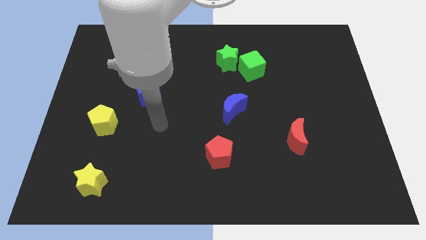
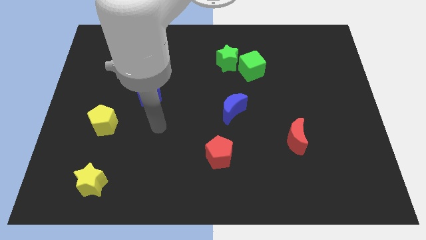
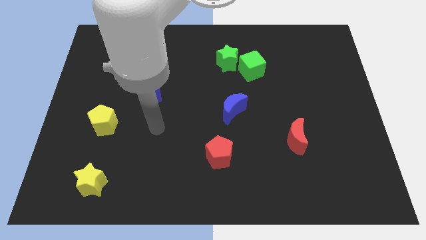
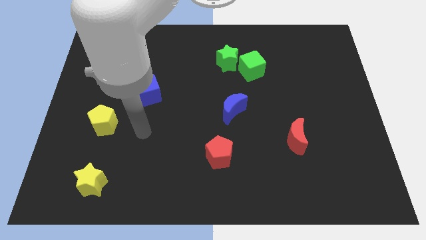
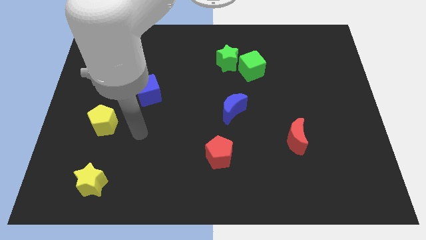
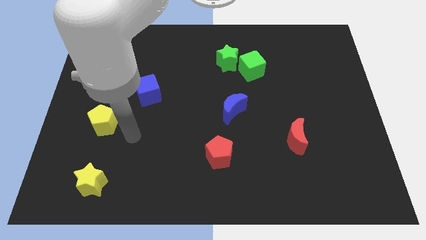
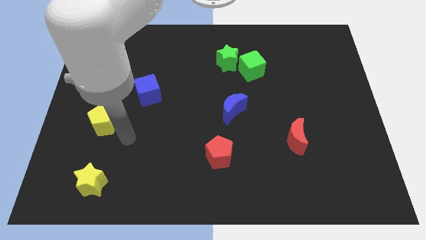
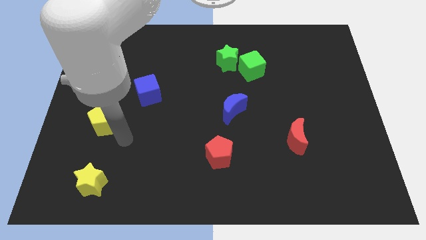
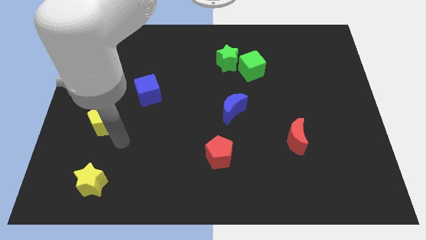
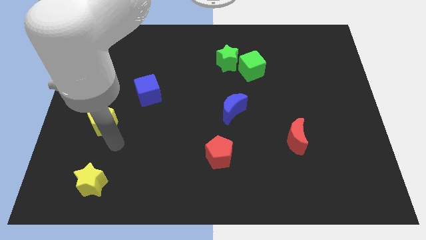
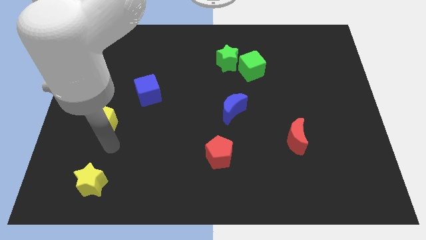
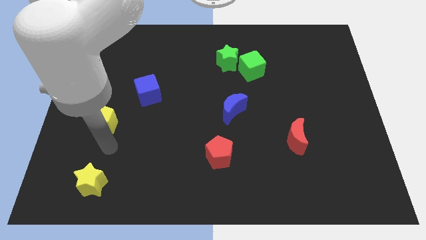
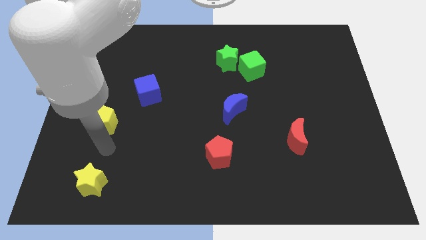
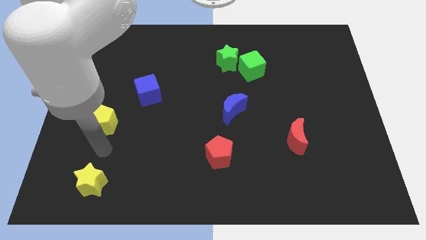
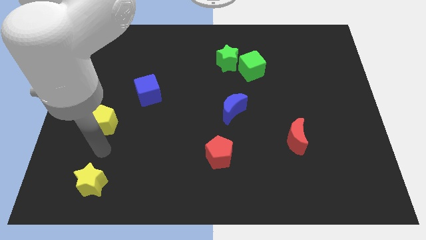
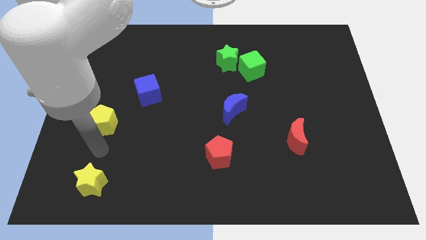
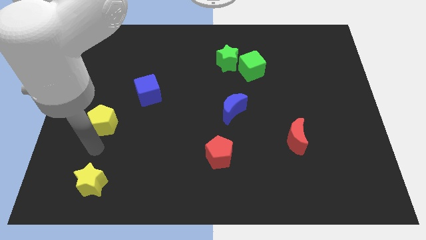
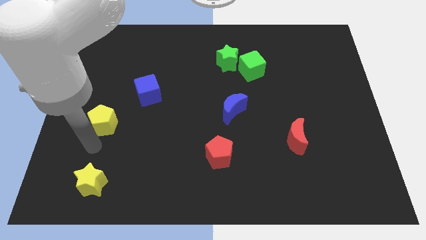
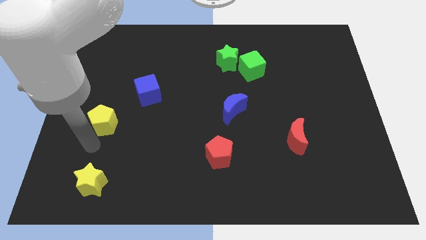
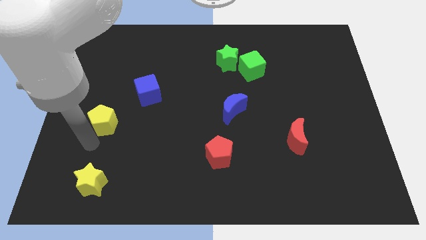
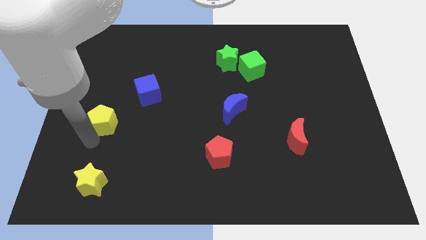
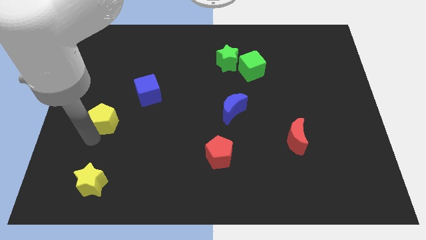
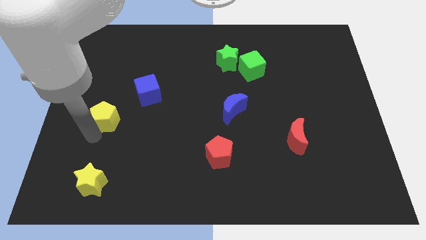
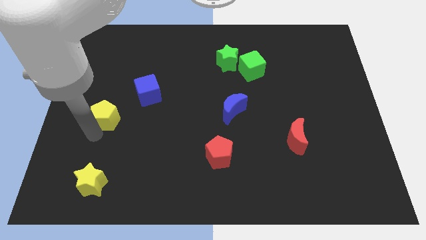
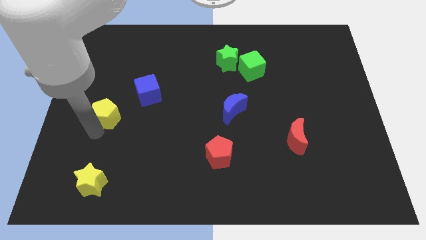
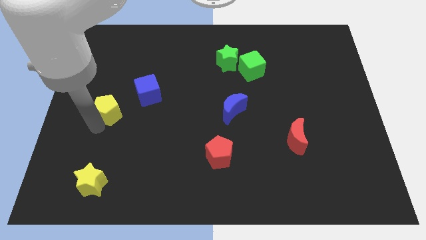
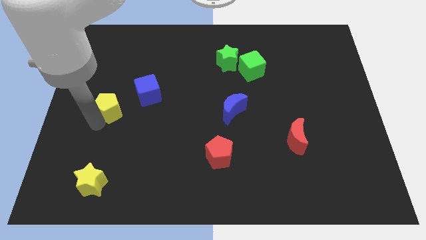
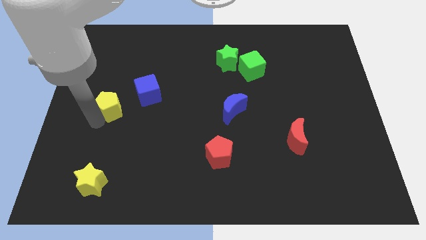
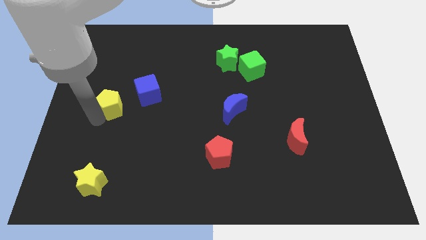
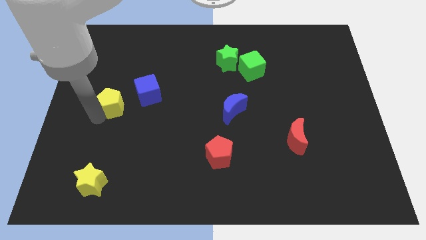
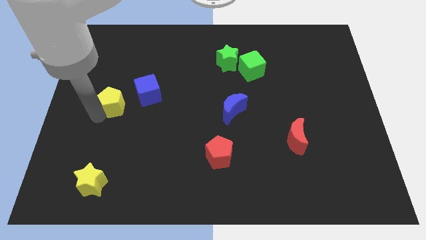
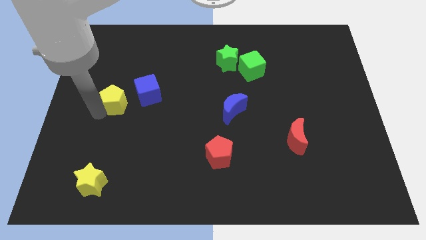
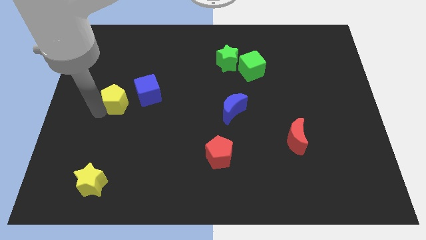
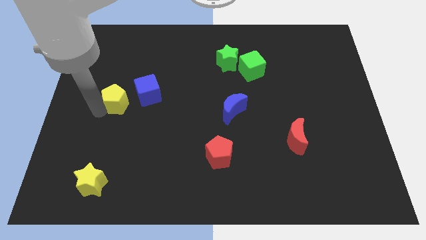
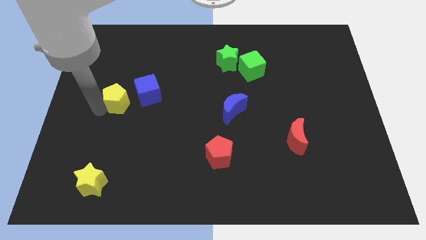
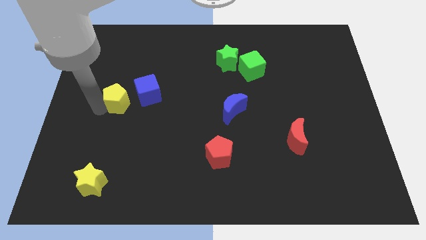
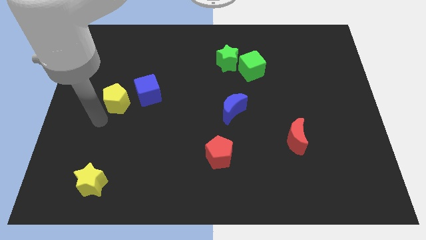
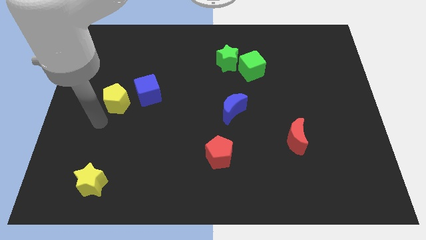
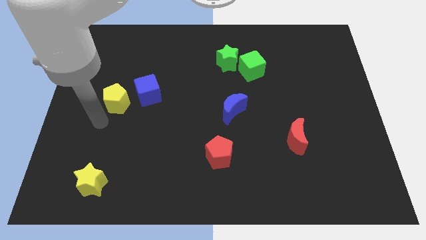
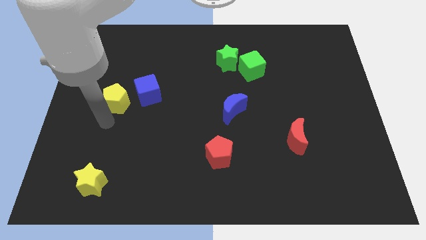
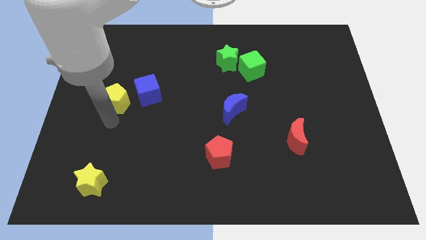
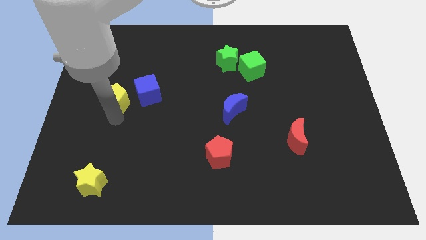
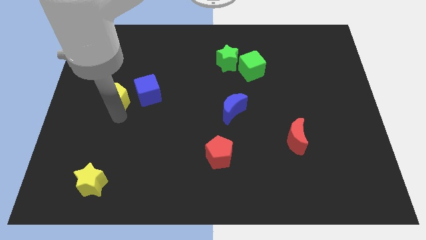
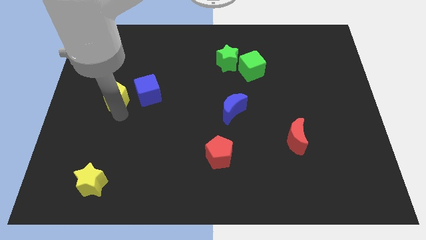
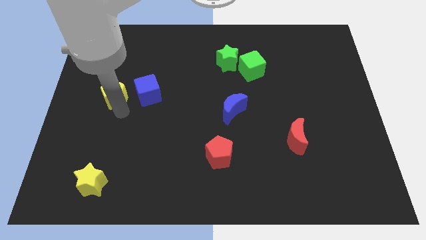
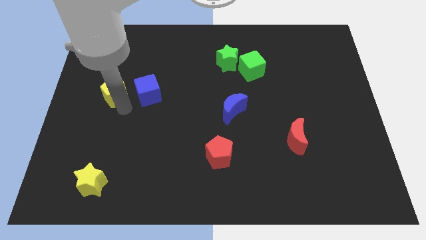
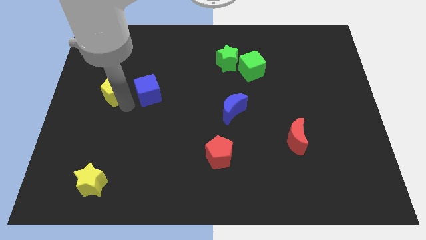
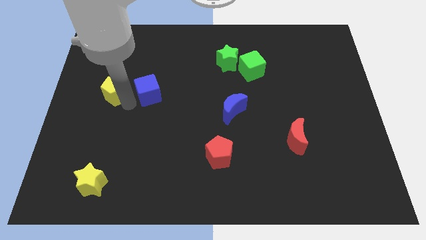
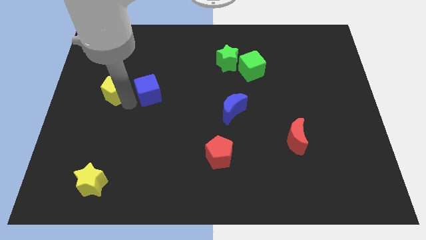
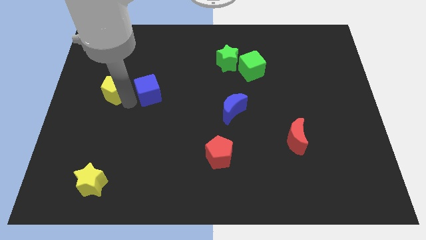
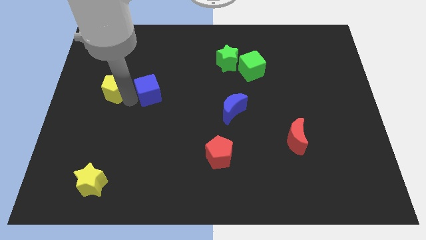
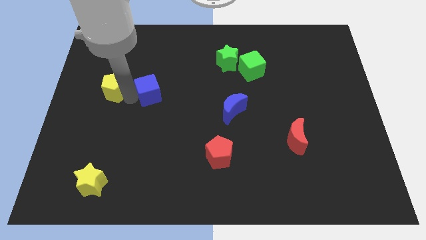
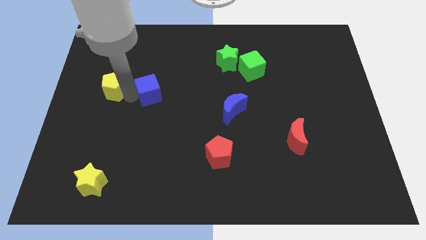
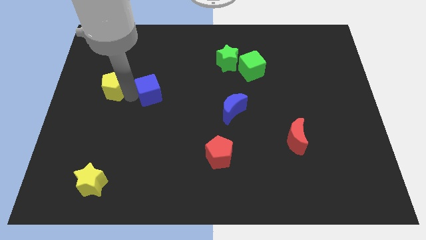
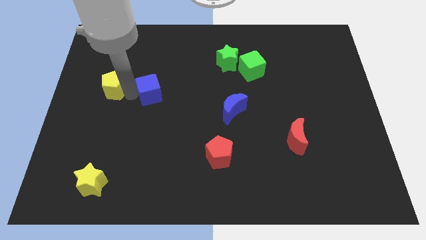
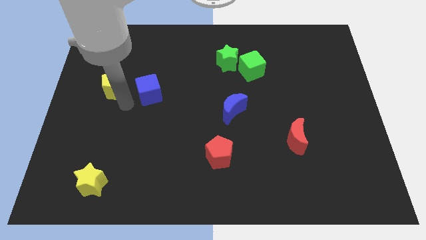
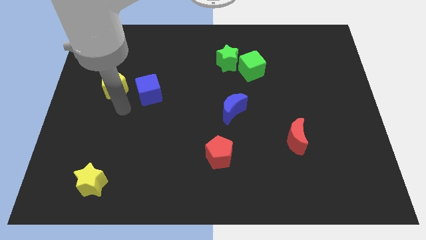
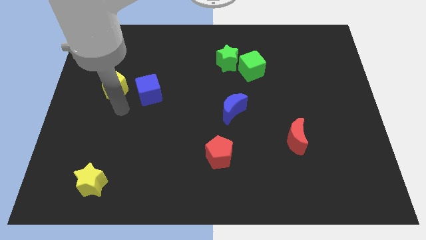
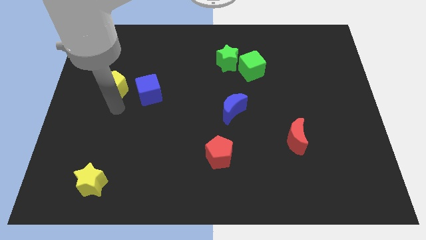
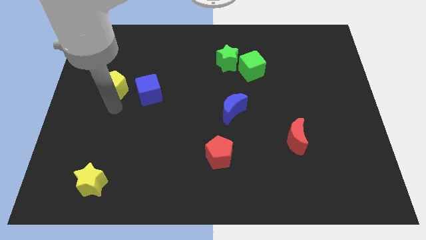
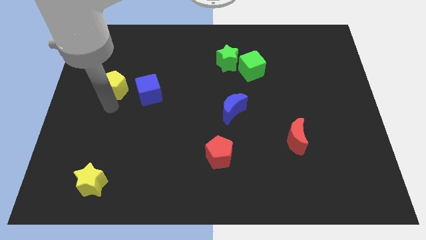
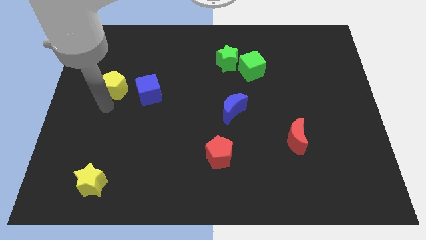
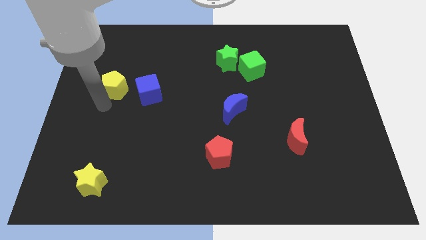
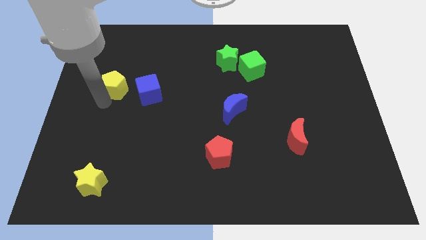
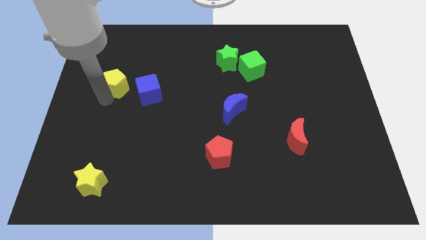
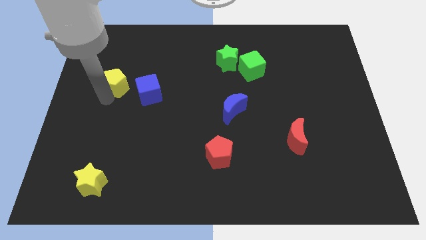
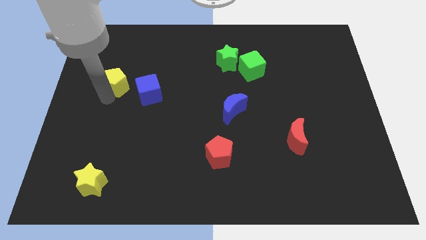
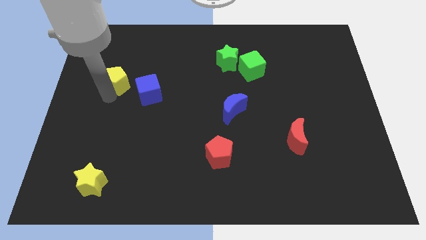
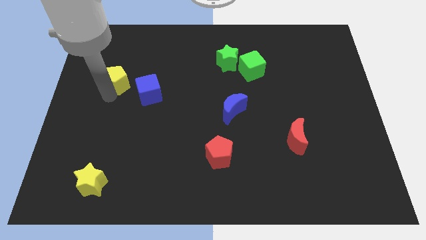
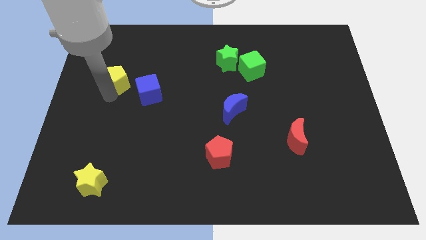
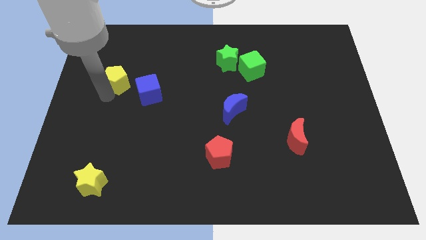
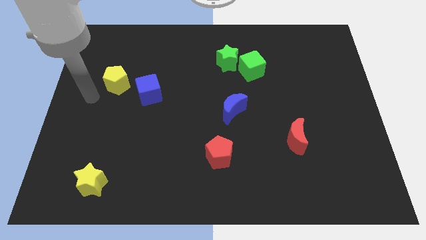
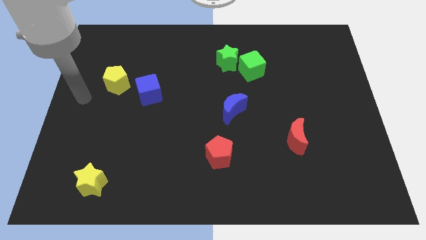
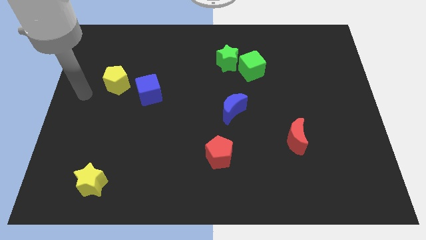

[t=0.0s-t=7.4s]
push the yellow pentagon towards the left center of the board

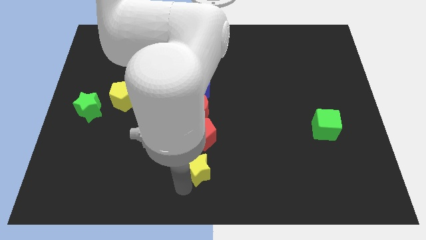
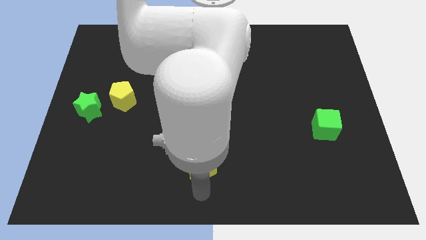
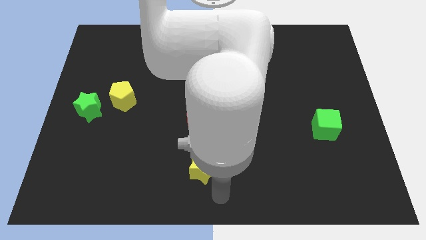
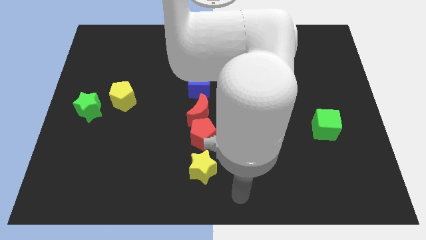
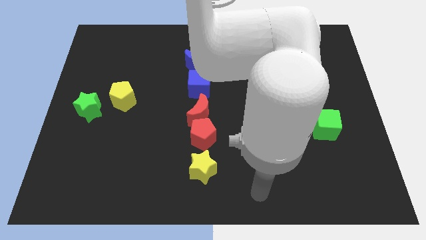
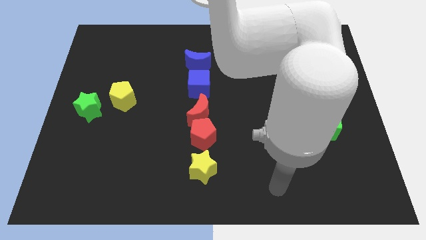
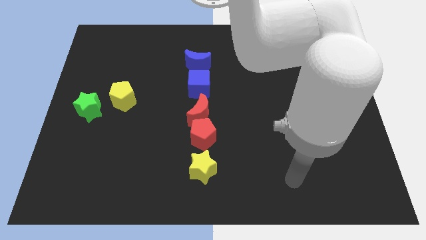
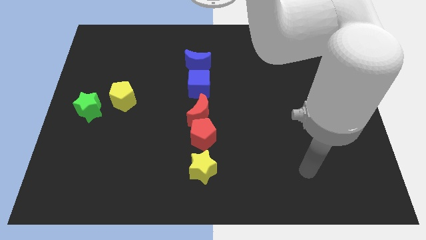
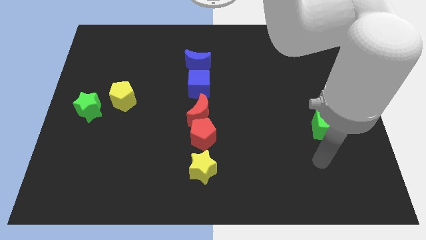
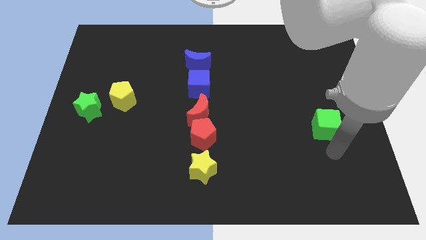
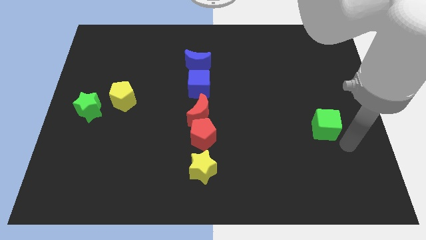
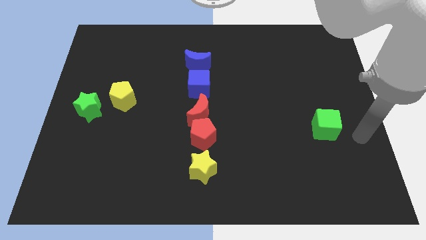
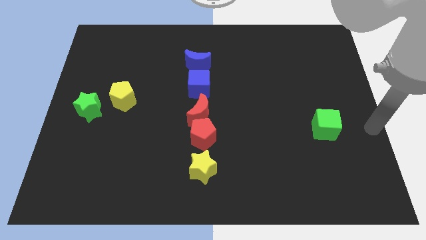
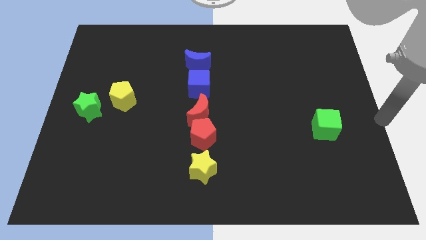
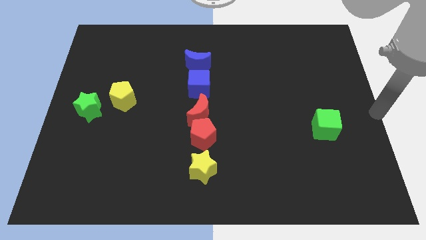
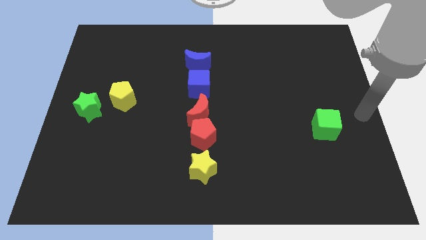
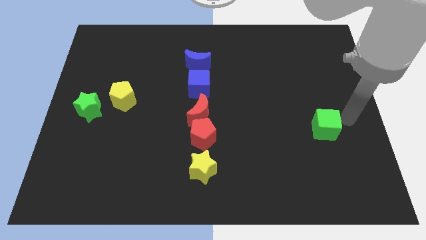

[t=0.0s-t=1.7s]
point your arm right to green cube
